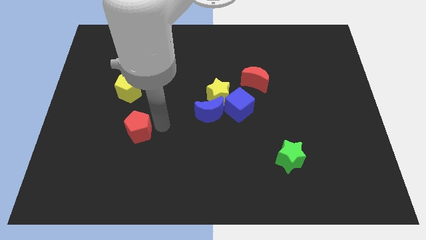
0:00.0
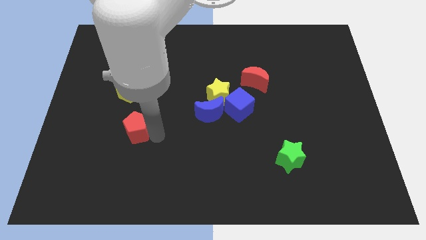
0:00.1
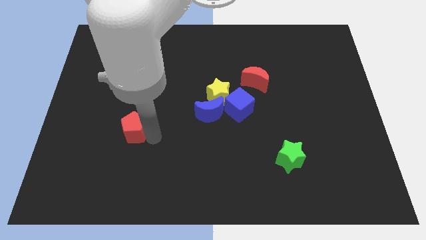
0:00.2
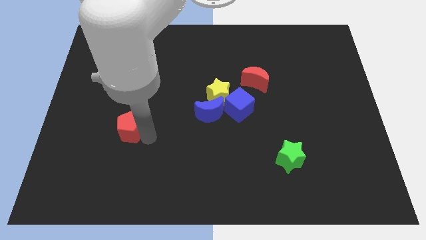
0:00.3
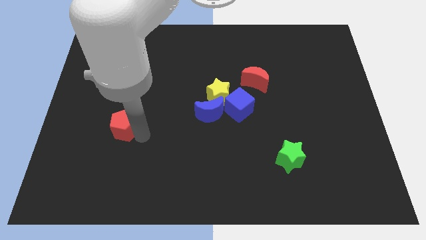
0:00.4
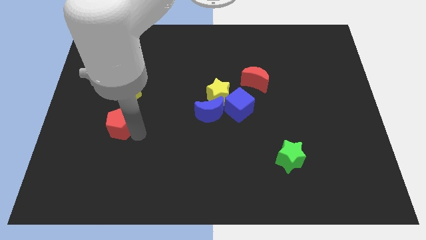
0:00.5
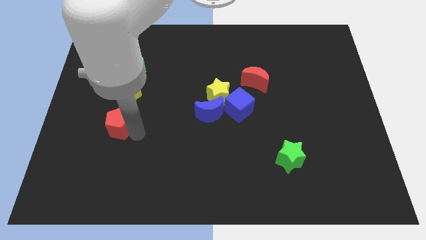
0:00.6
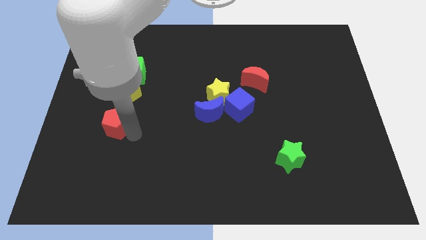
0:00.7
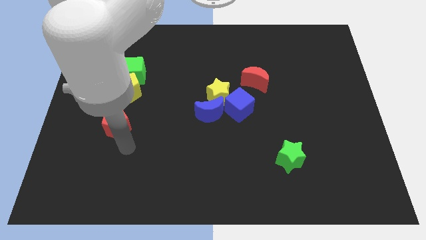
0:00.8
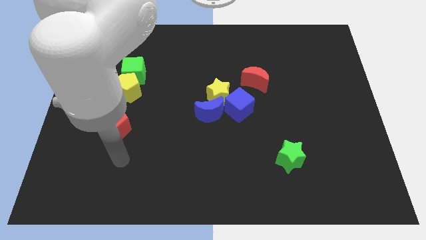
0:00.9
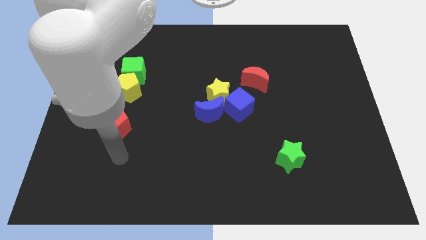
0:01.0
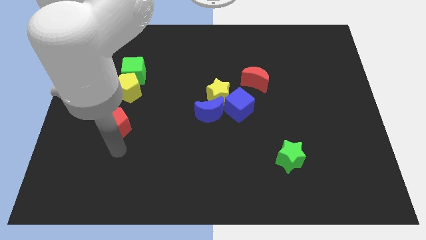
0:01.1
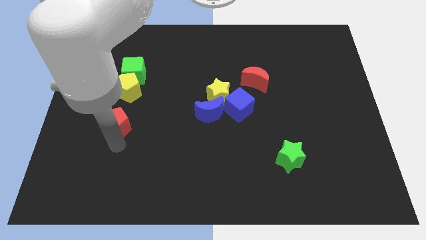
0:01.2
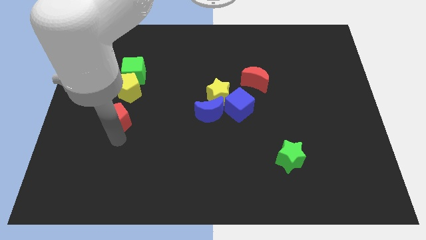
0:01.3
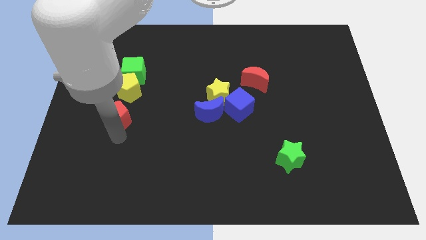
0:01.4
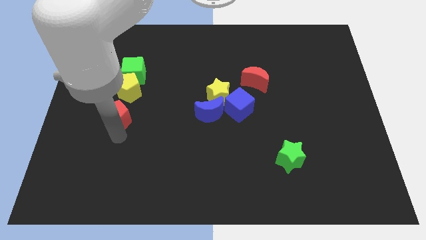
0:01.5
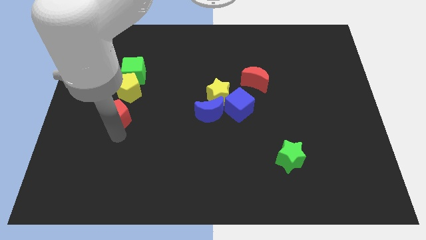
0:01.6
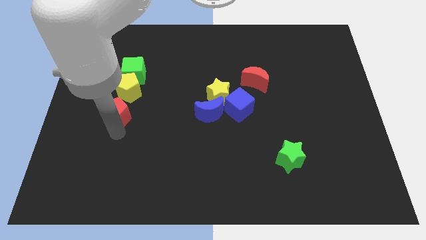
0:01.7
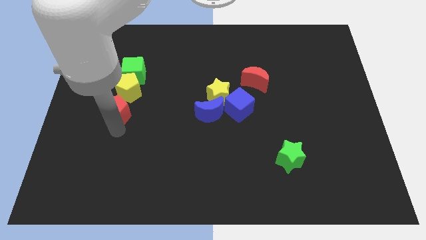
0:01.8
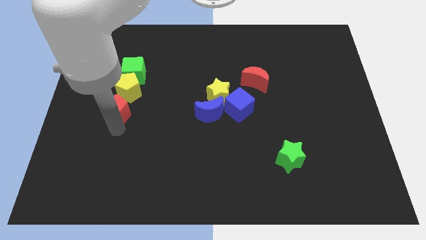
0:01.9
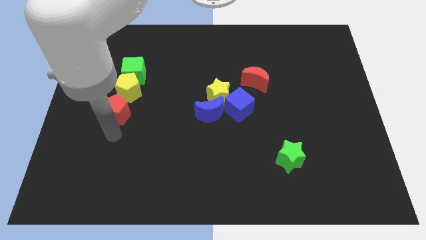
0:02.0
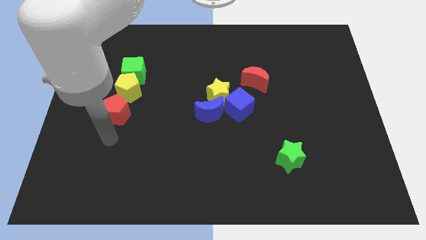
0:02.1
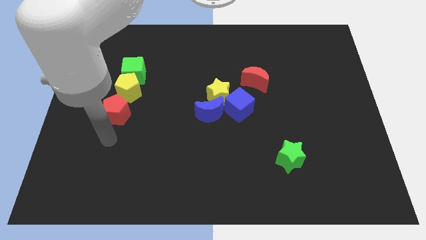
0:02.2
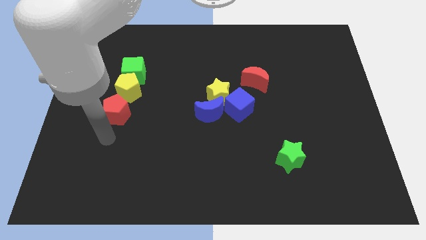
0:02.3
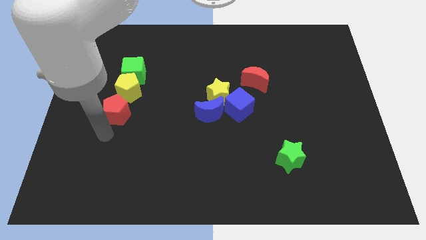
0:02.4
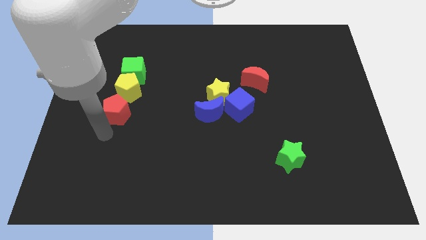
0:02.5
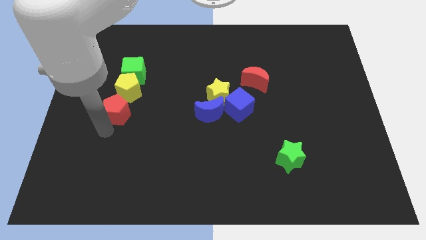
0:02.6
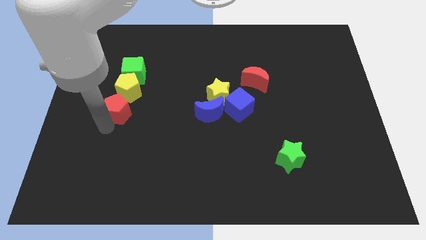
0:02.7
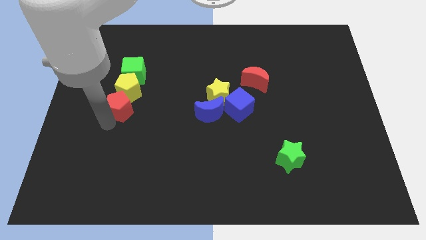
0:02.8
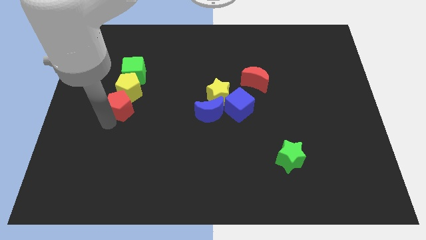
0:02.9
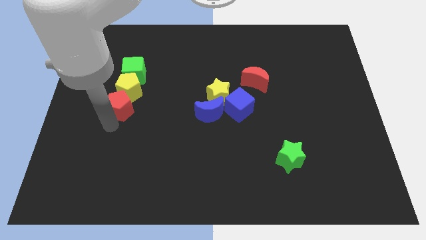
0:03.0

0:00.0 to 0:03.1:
move the red pentagon into the bottom side of the yellow pentagon

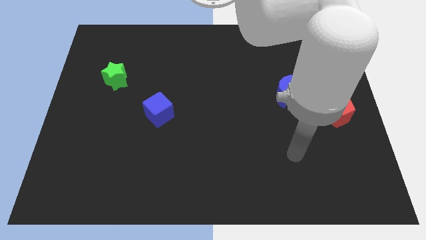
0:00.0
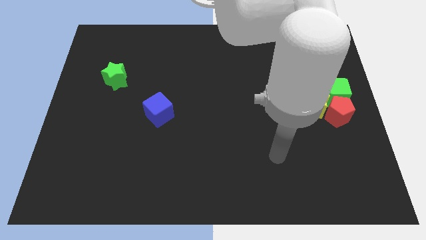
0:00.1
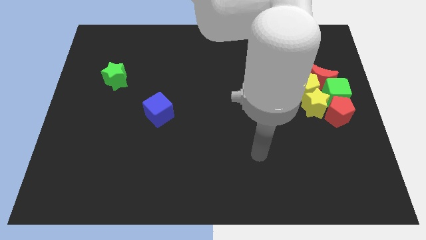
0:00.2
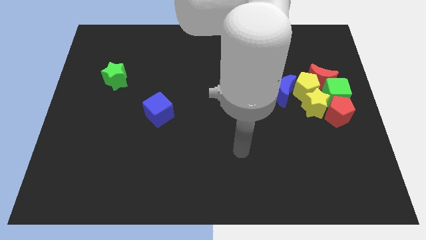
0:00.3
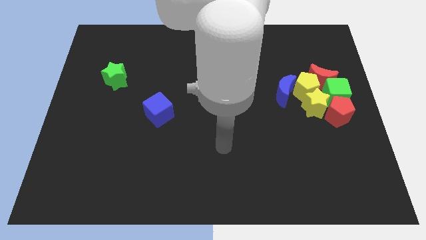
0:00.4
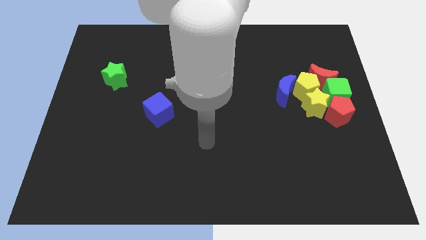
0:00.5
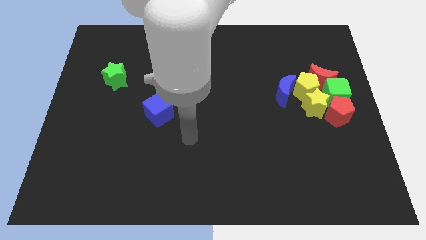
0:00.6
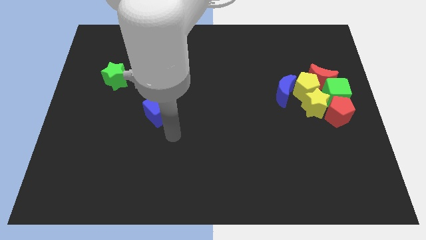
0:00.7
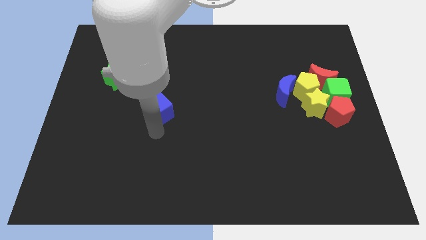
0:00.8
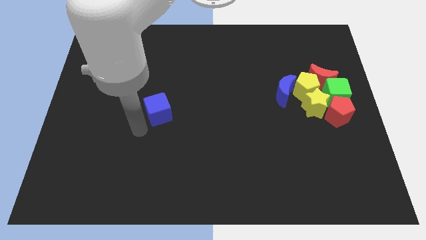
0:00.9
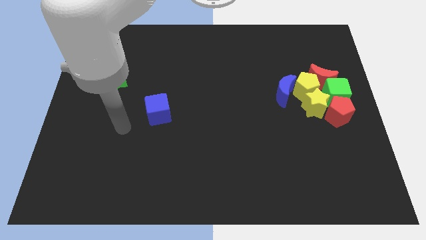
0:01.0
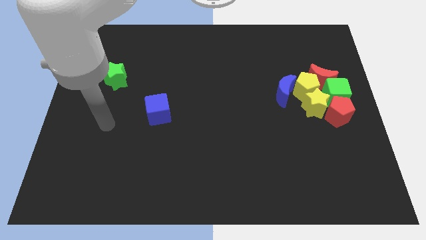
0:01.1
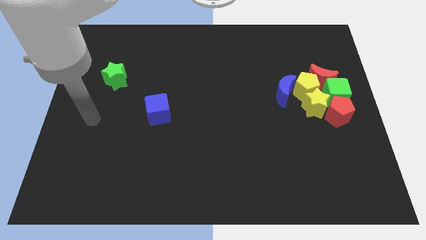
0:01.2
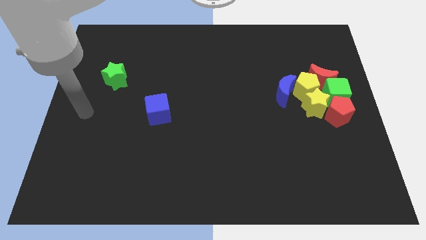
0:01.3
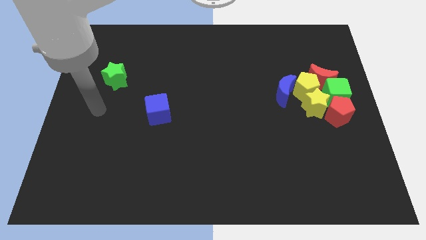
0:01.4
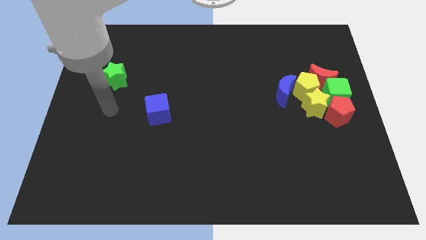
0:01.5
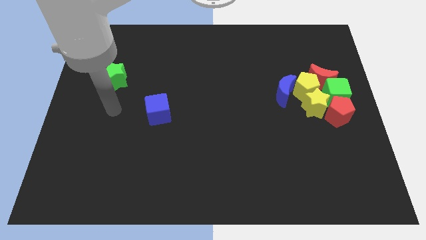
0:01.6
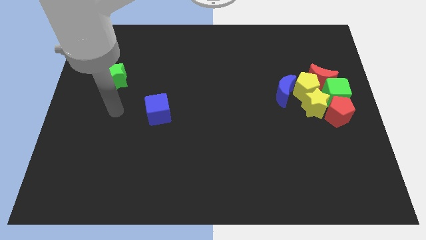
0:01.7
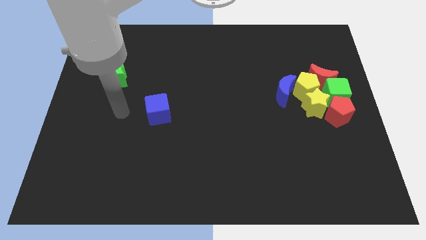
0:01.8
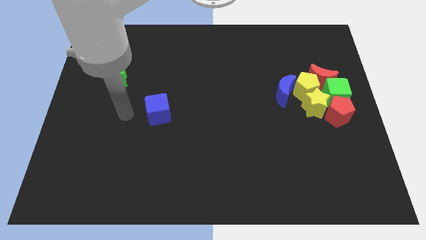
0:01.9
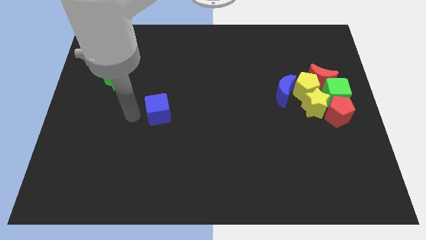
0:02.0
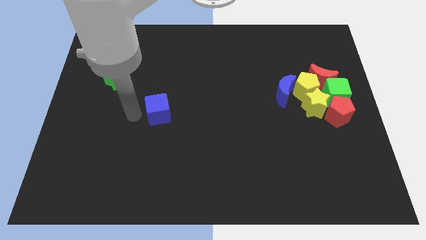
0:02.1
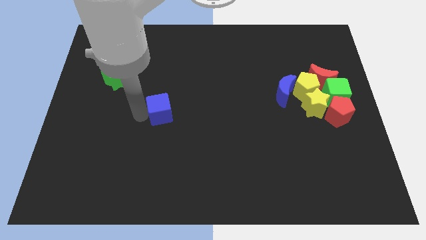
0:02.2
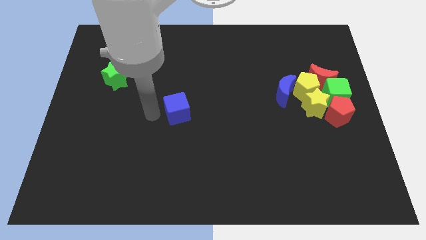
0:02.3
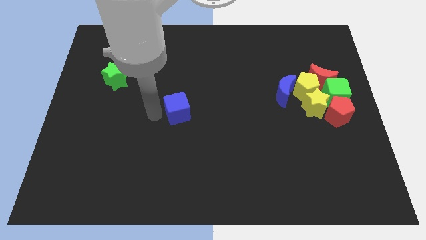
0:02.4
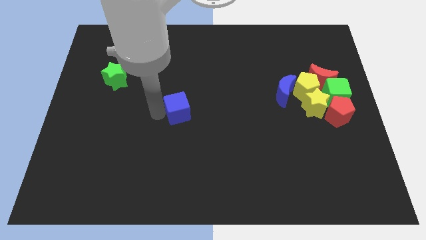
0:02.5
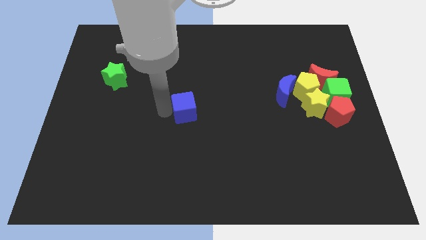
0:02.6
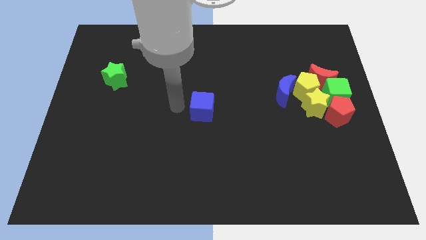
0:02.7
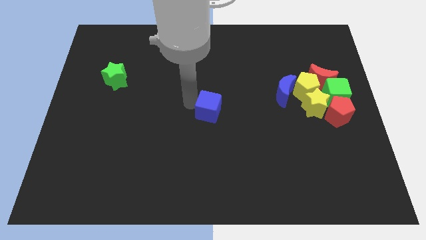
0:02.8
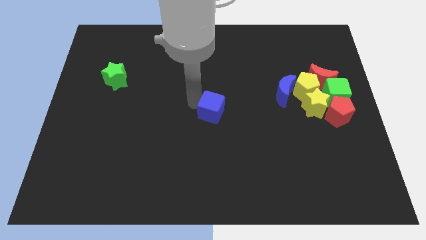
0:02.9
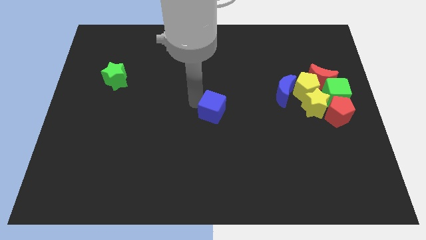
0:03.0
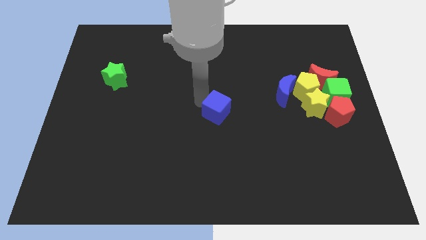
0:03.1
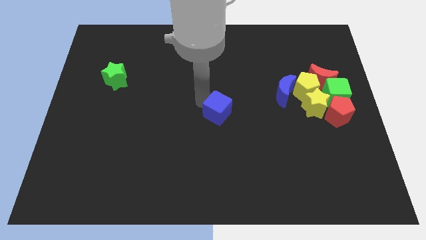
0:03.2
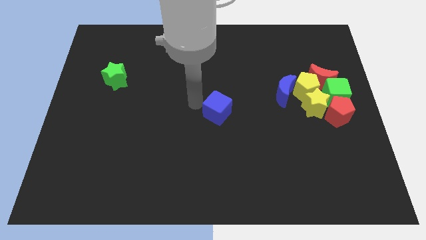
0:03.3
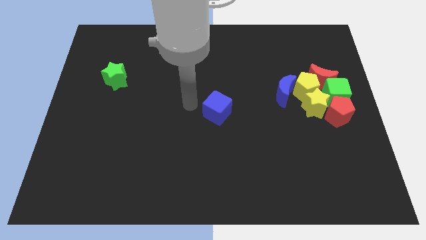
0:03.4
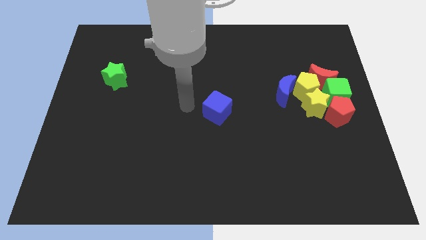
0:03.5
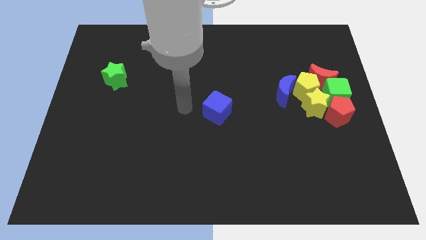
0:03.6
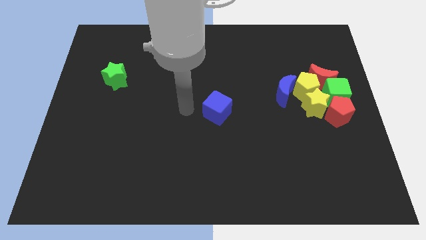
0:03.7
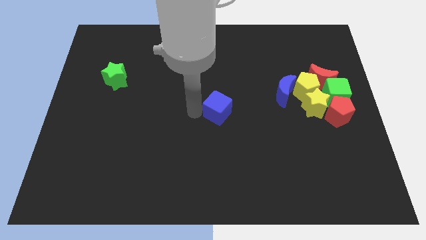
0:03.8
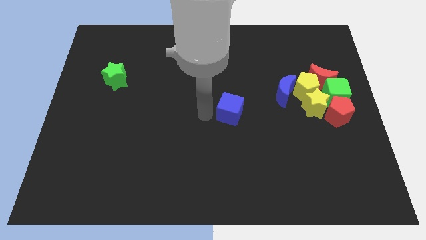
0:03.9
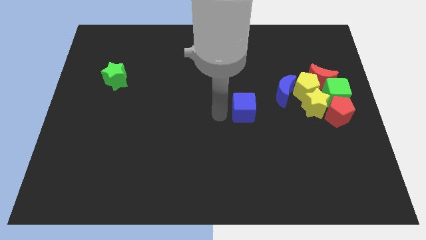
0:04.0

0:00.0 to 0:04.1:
move the blue cube to the left of group of blocks

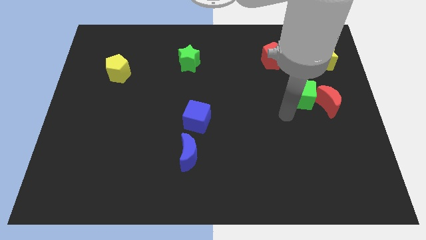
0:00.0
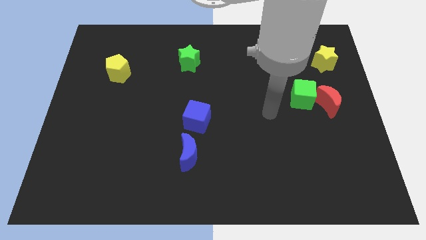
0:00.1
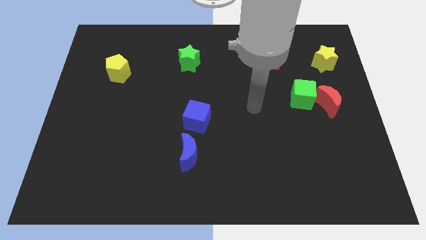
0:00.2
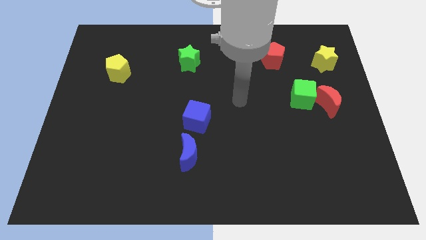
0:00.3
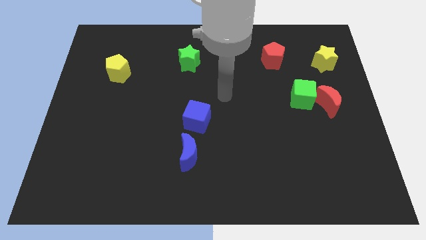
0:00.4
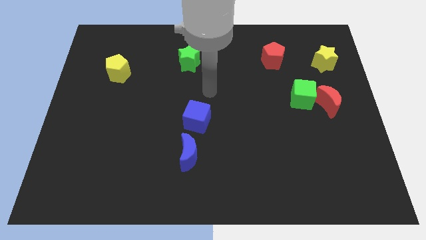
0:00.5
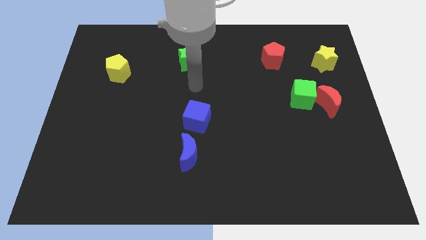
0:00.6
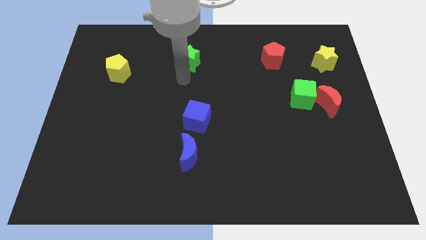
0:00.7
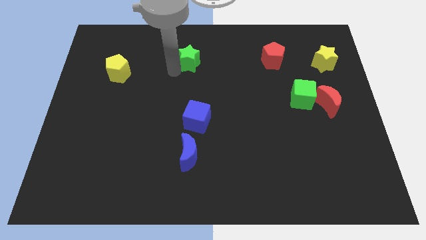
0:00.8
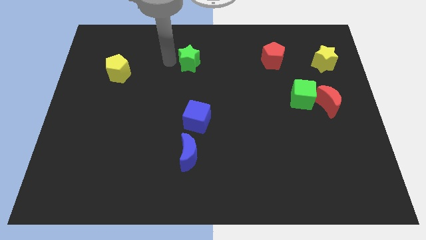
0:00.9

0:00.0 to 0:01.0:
place your hand close to green star

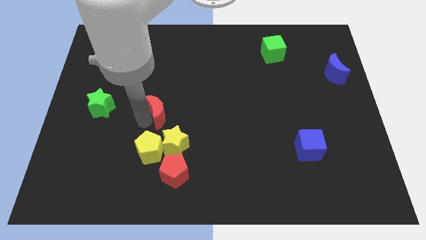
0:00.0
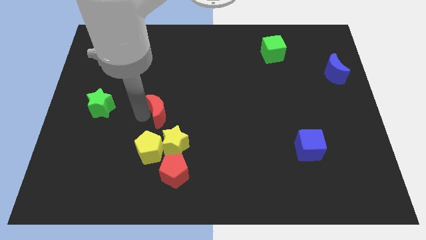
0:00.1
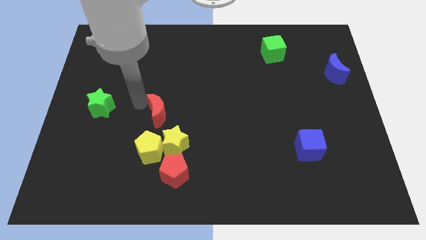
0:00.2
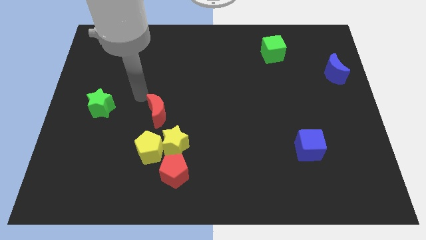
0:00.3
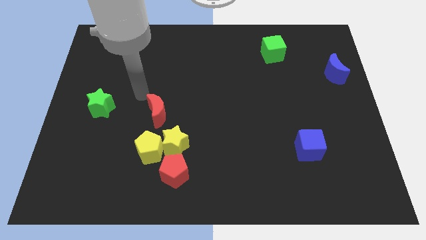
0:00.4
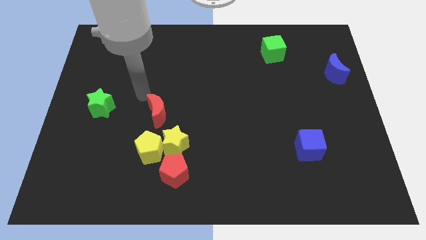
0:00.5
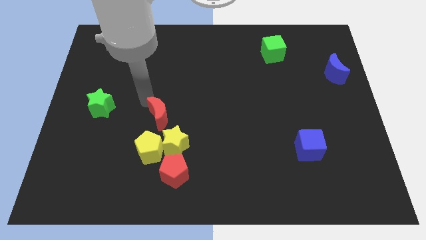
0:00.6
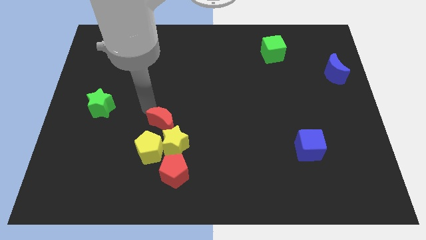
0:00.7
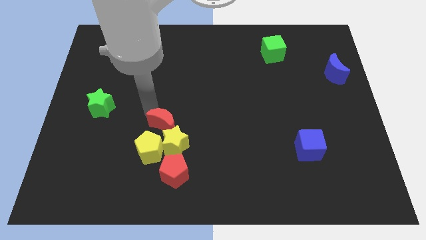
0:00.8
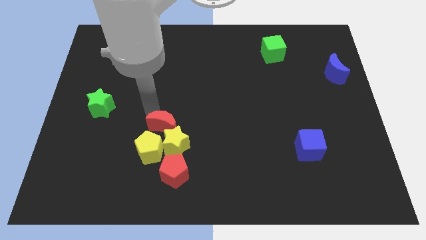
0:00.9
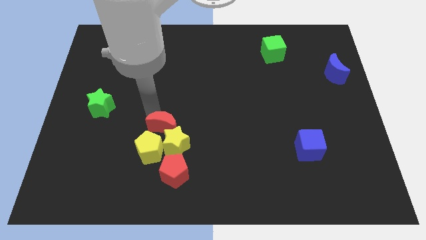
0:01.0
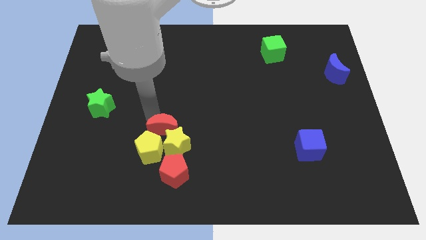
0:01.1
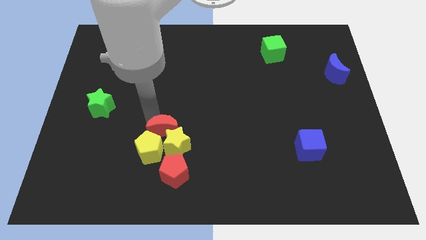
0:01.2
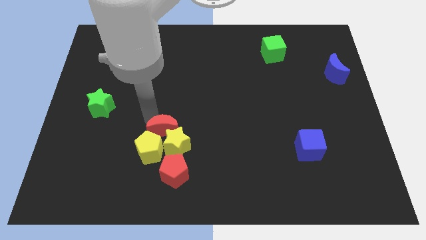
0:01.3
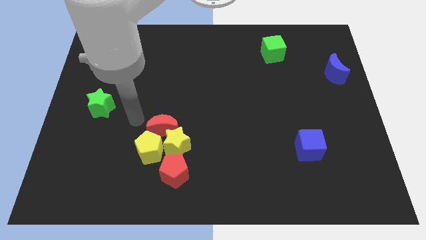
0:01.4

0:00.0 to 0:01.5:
place red crescent into yellow star and pentagon
